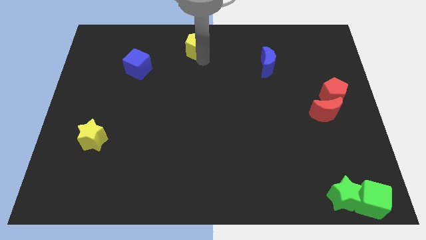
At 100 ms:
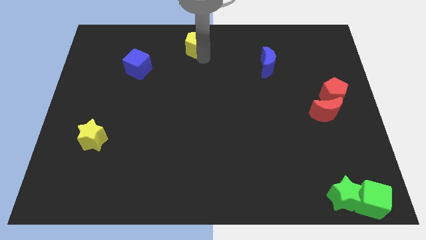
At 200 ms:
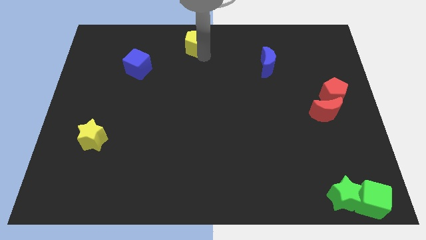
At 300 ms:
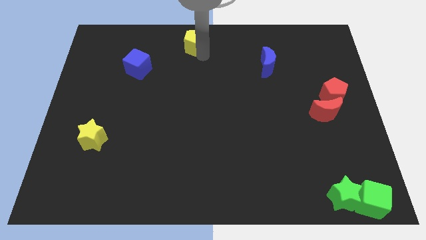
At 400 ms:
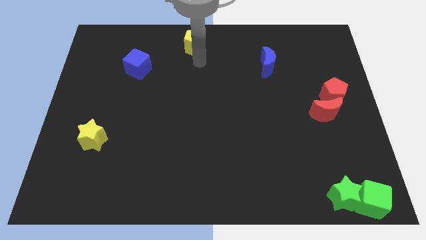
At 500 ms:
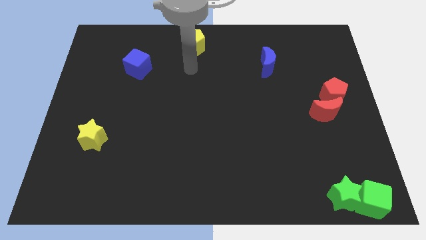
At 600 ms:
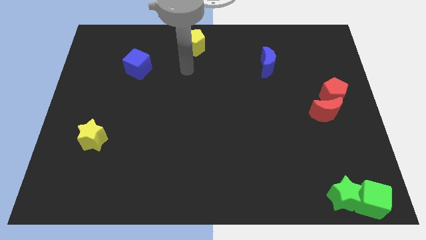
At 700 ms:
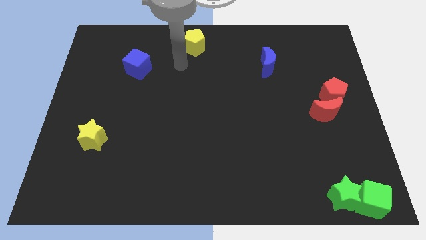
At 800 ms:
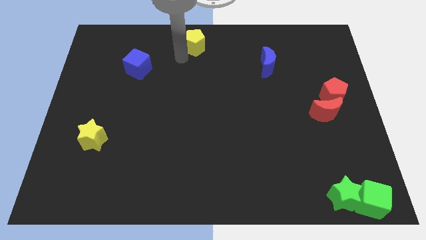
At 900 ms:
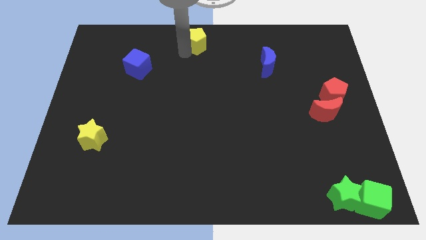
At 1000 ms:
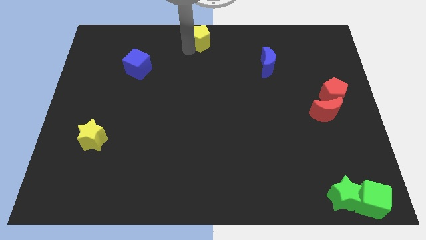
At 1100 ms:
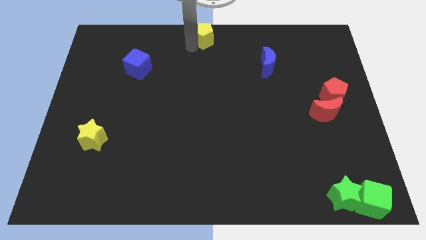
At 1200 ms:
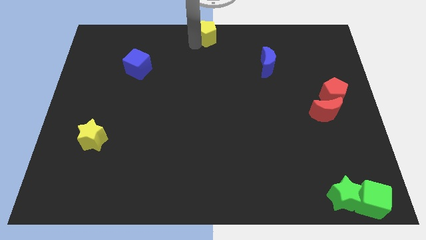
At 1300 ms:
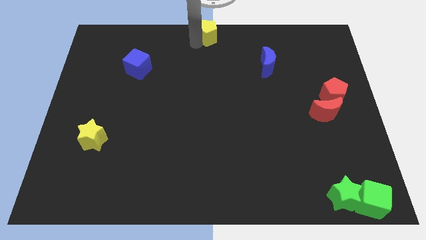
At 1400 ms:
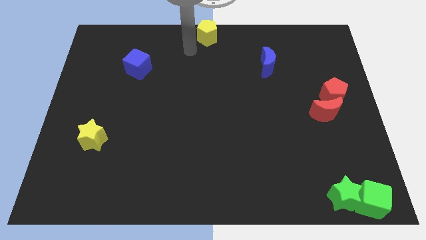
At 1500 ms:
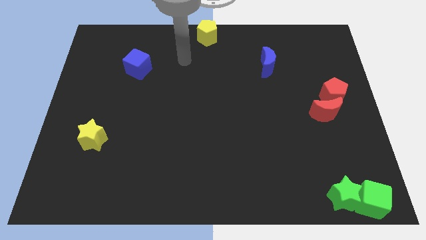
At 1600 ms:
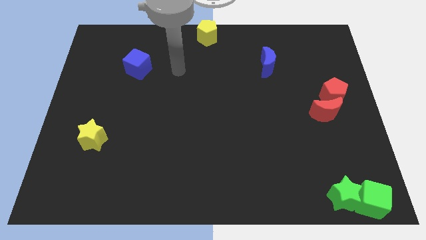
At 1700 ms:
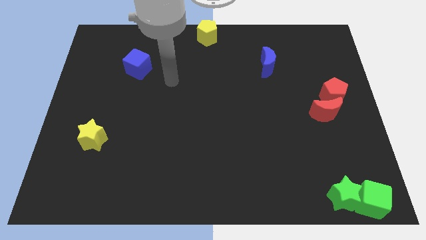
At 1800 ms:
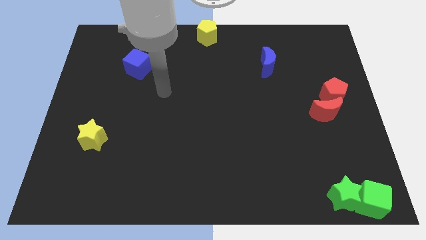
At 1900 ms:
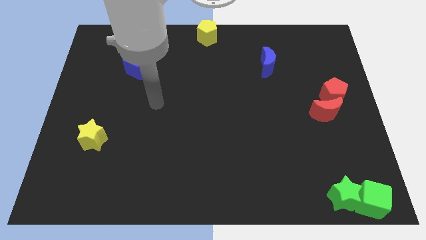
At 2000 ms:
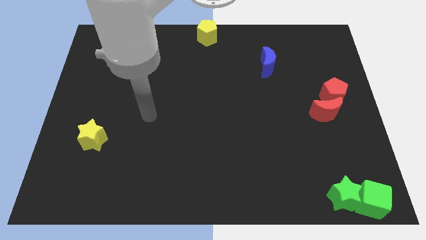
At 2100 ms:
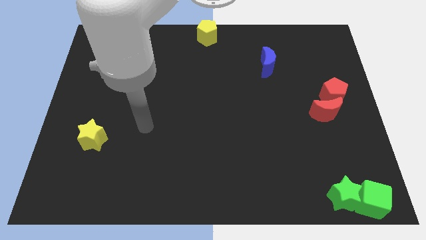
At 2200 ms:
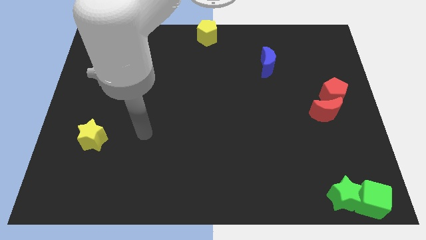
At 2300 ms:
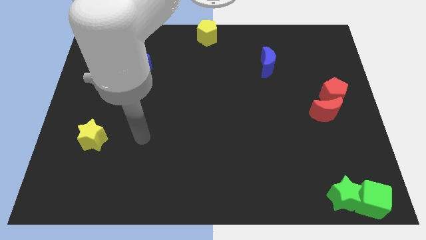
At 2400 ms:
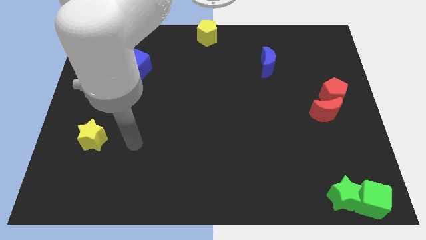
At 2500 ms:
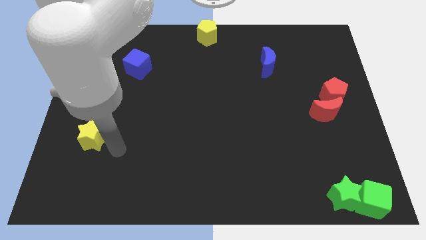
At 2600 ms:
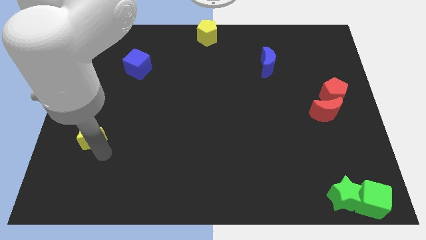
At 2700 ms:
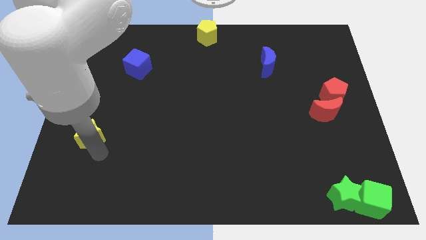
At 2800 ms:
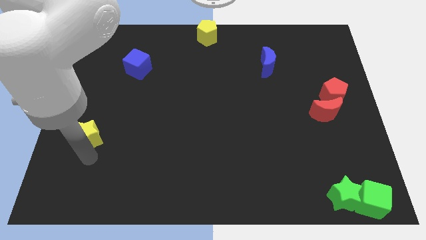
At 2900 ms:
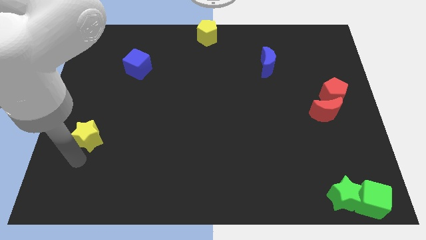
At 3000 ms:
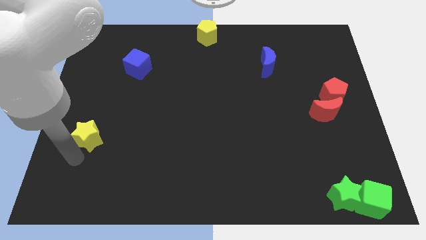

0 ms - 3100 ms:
place the arm near the yellow star

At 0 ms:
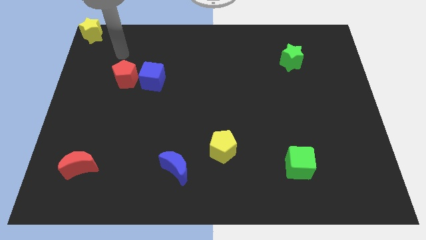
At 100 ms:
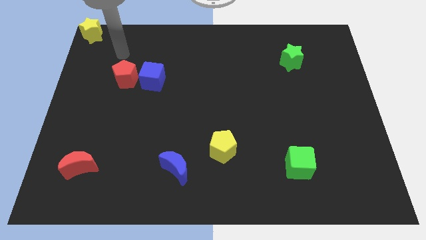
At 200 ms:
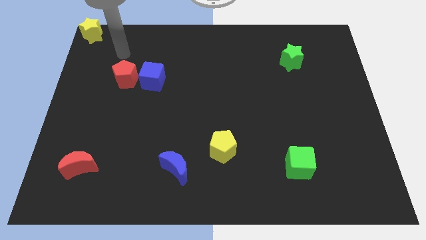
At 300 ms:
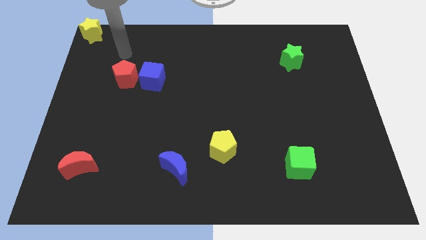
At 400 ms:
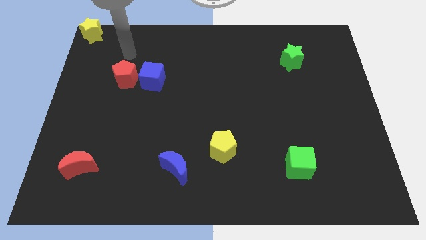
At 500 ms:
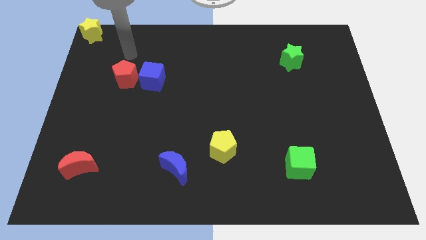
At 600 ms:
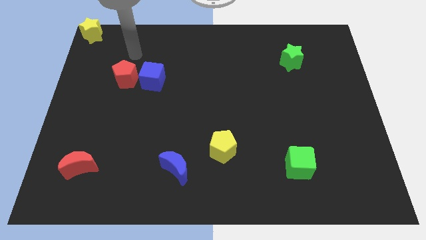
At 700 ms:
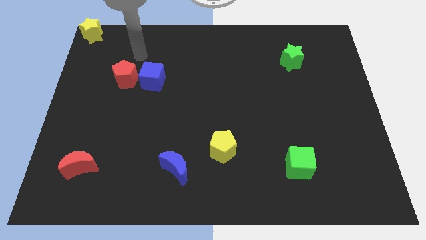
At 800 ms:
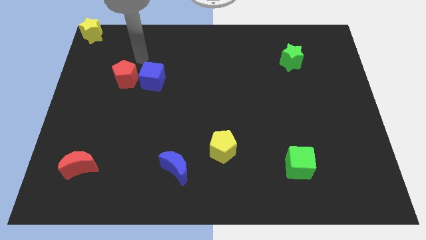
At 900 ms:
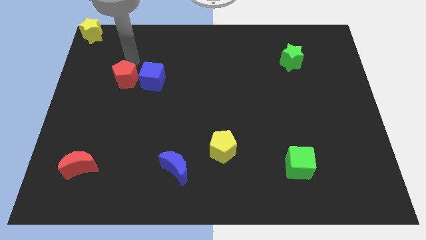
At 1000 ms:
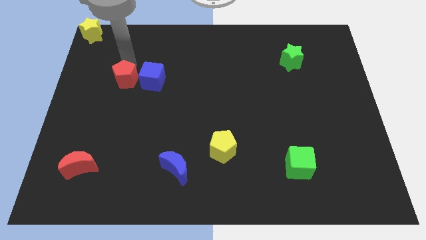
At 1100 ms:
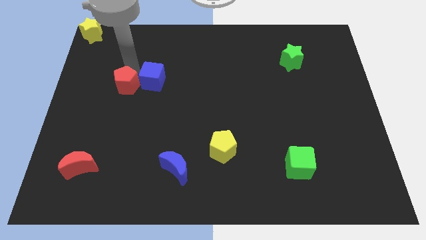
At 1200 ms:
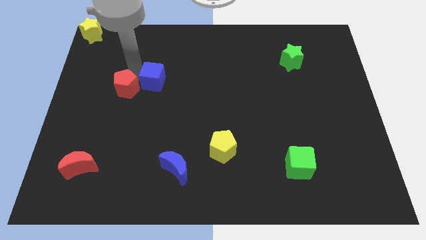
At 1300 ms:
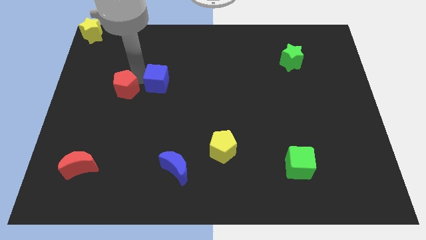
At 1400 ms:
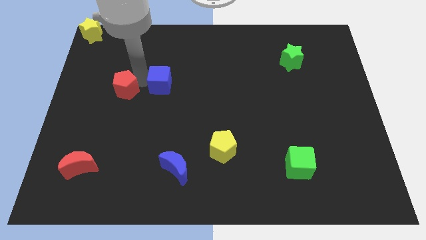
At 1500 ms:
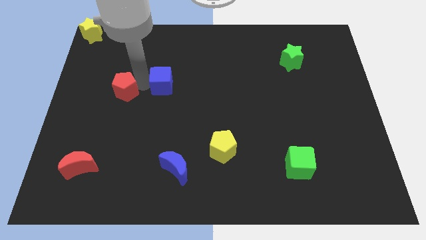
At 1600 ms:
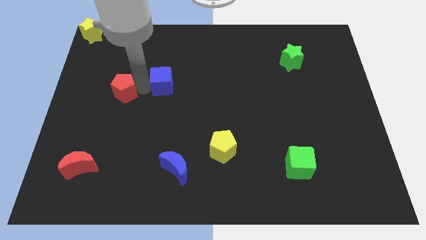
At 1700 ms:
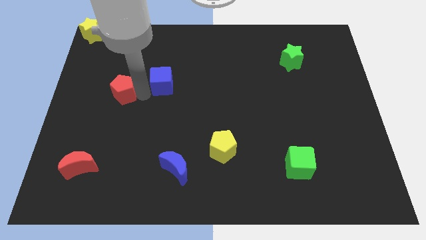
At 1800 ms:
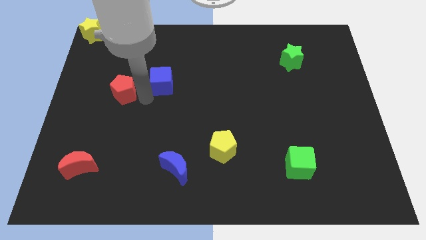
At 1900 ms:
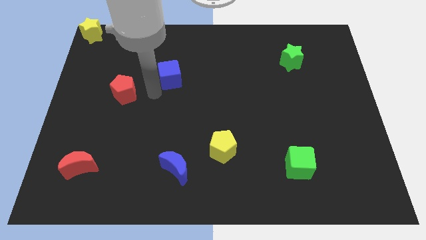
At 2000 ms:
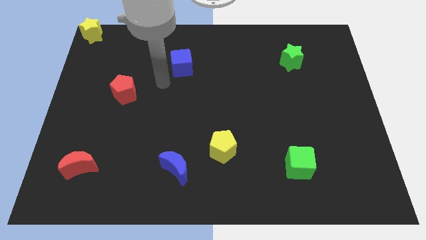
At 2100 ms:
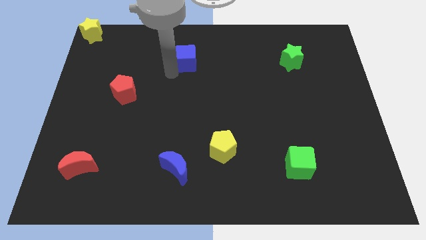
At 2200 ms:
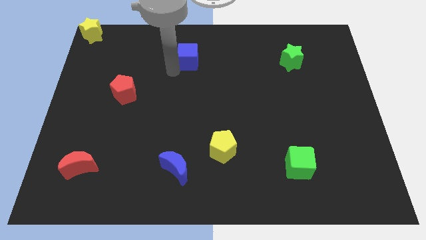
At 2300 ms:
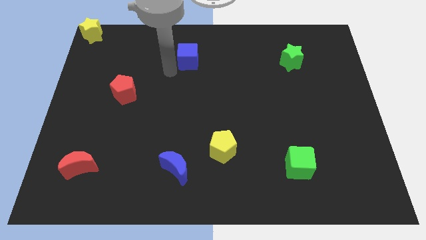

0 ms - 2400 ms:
separate the blue cube and red pentagon

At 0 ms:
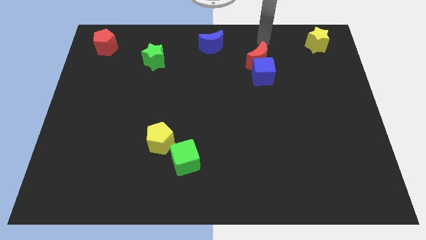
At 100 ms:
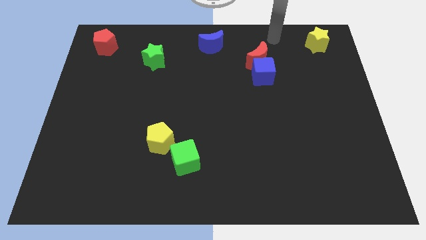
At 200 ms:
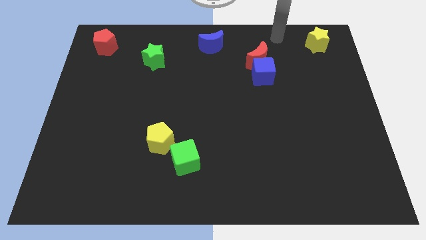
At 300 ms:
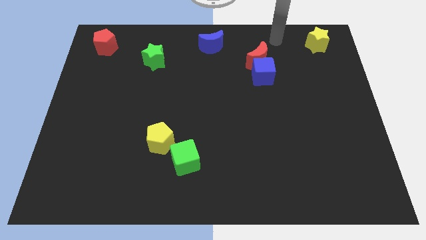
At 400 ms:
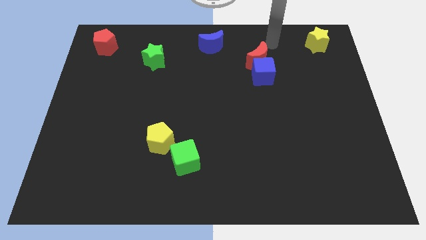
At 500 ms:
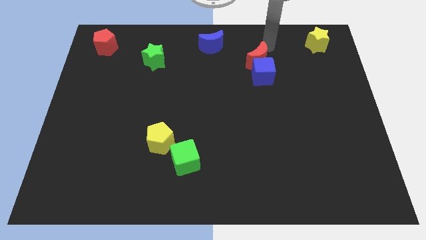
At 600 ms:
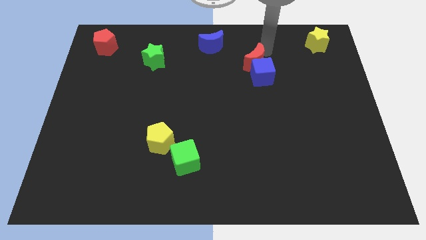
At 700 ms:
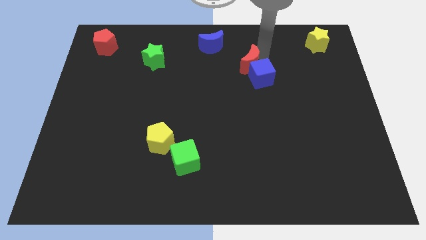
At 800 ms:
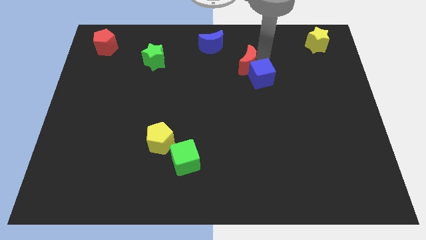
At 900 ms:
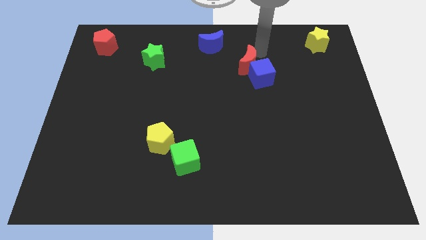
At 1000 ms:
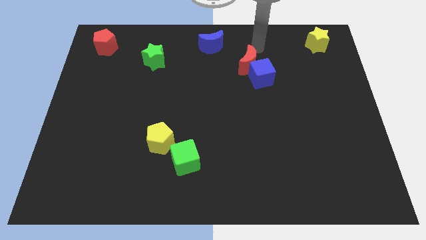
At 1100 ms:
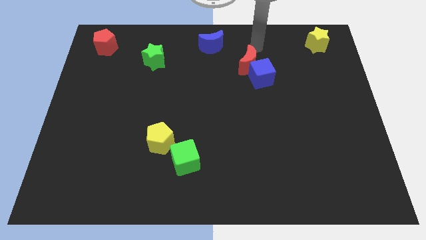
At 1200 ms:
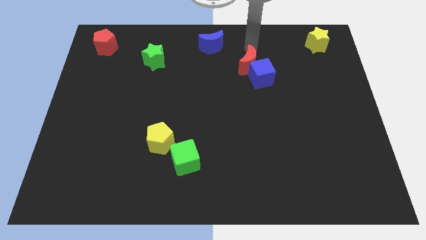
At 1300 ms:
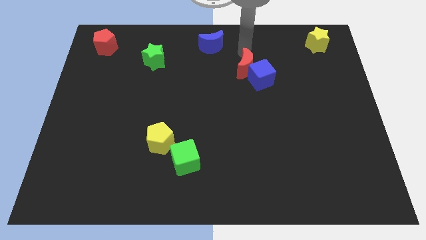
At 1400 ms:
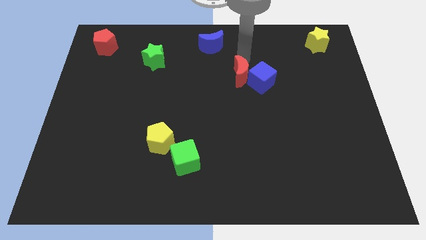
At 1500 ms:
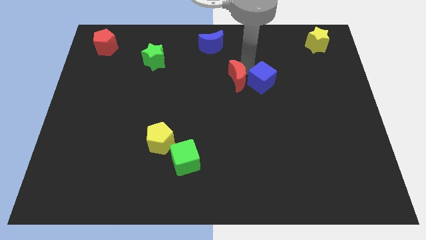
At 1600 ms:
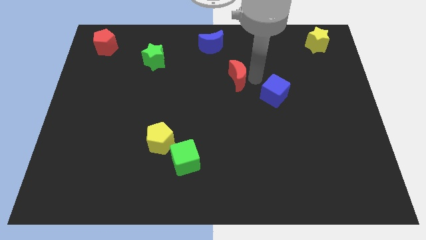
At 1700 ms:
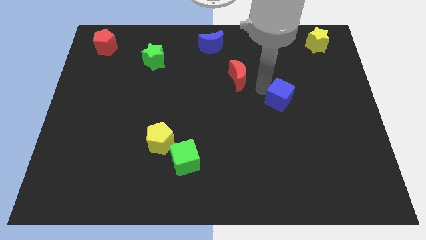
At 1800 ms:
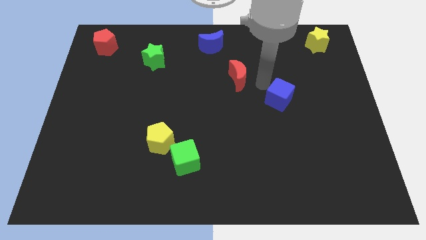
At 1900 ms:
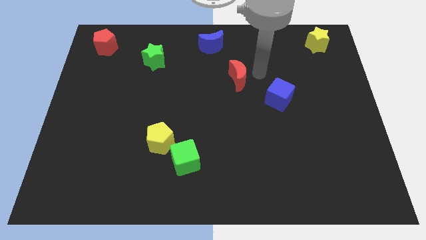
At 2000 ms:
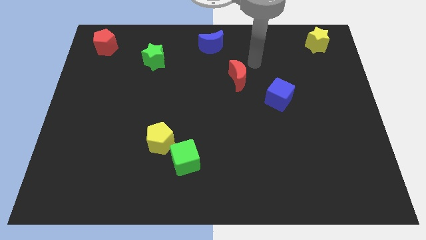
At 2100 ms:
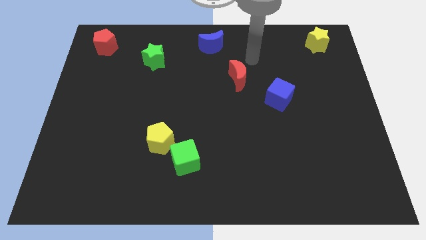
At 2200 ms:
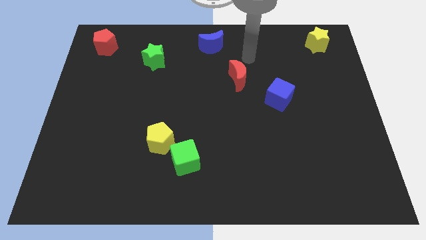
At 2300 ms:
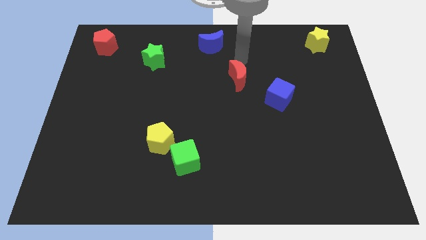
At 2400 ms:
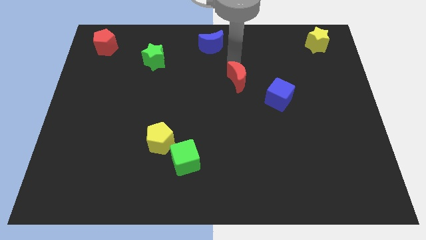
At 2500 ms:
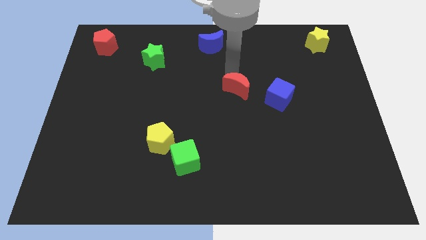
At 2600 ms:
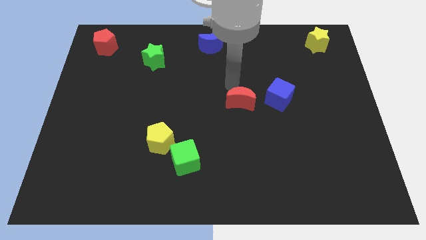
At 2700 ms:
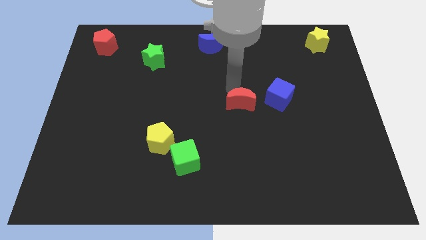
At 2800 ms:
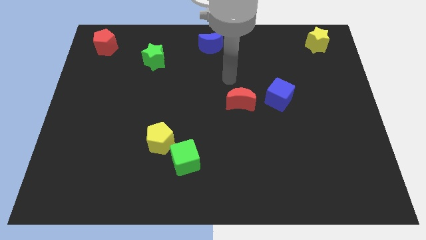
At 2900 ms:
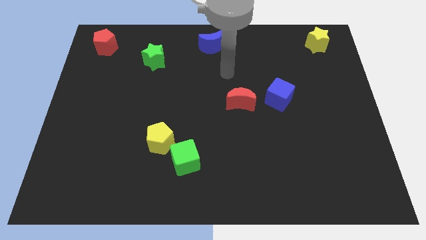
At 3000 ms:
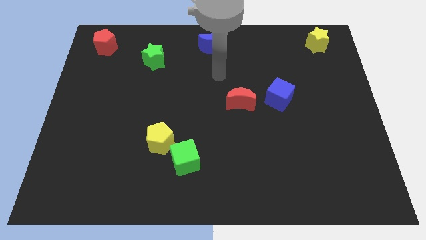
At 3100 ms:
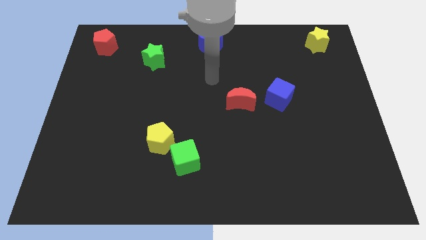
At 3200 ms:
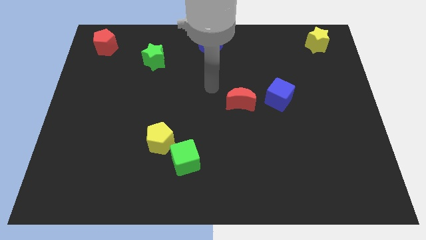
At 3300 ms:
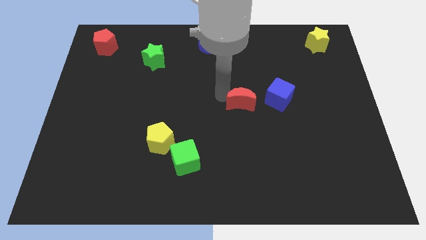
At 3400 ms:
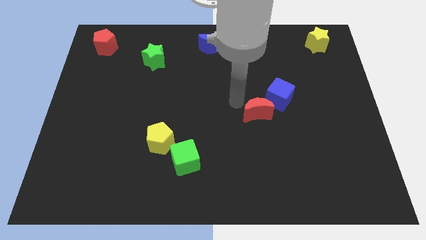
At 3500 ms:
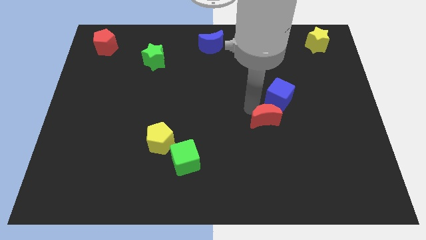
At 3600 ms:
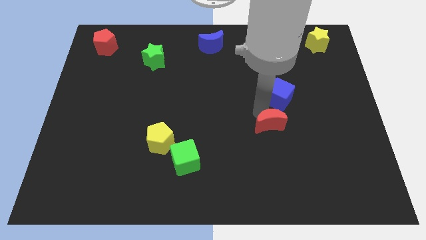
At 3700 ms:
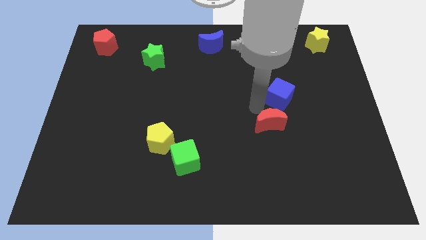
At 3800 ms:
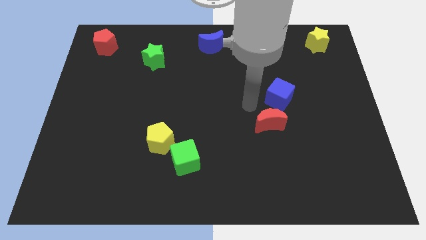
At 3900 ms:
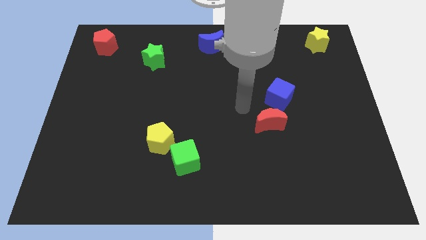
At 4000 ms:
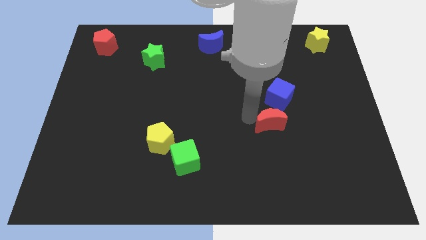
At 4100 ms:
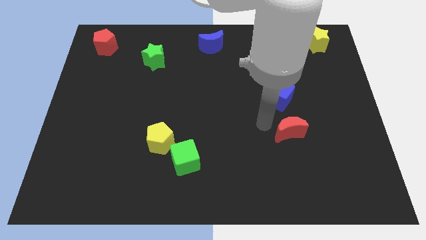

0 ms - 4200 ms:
push the red crescent to the bottom of the blue cube
